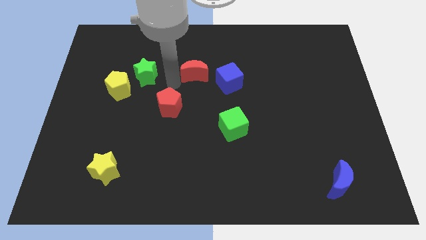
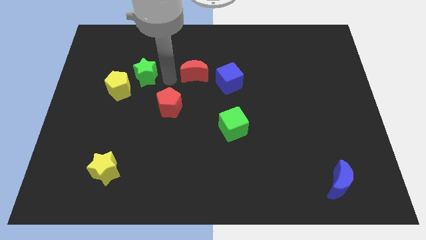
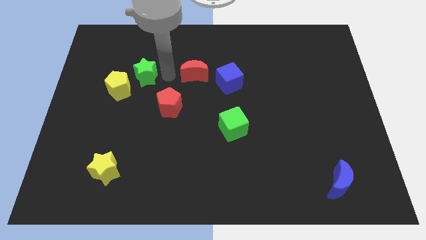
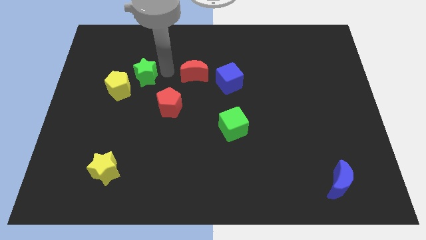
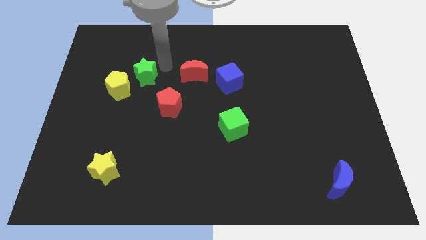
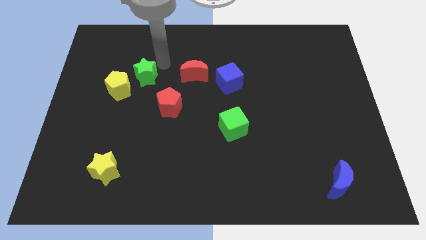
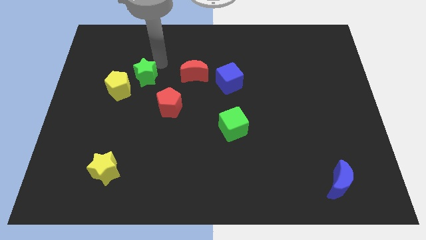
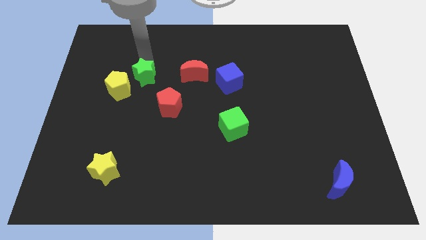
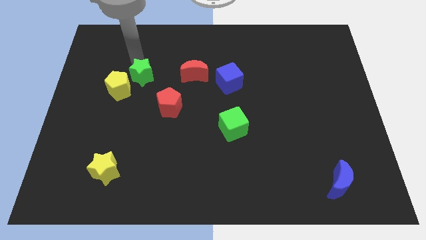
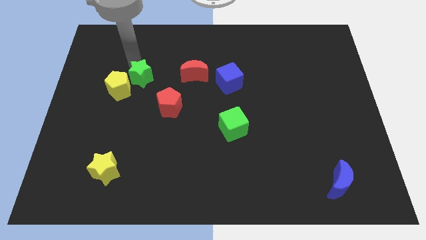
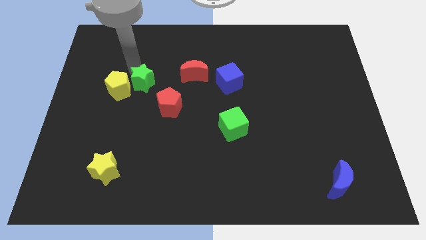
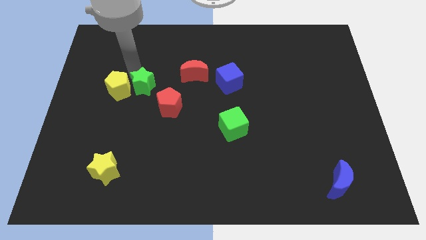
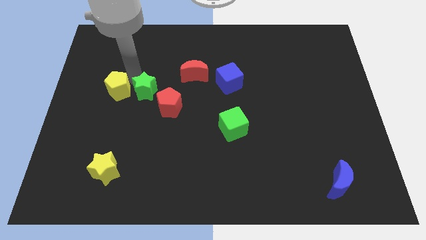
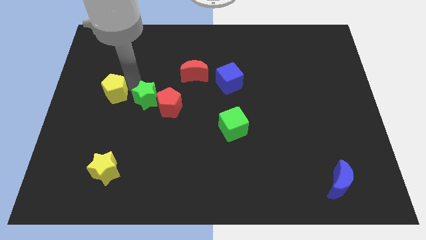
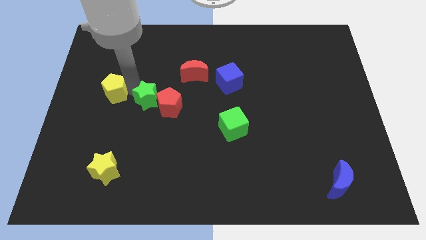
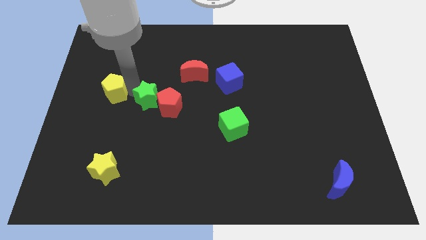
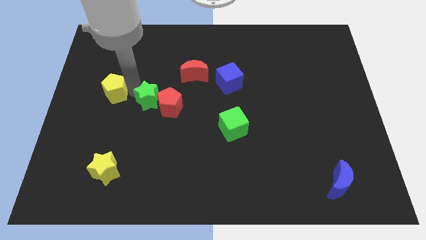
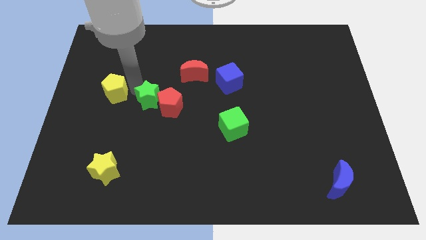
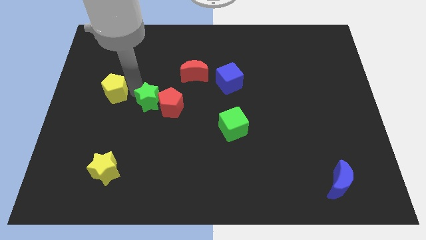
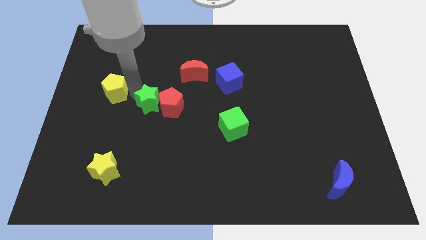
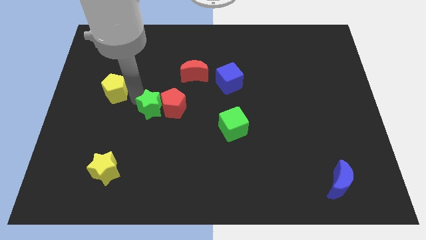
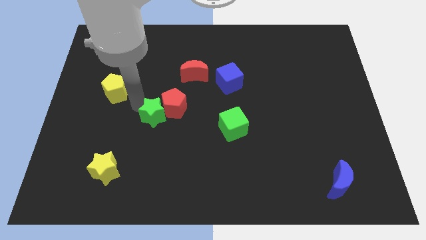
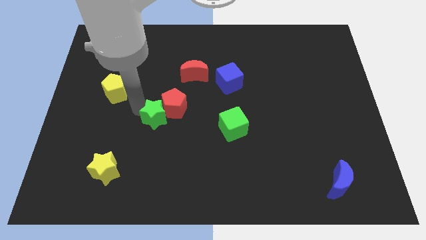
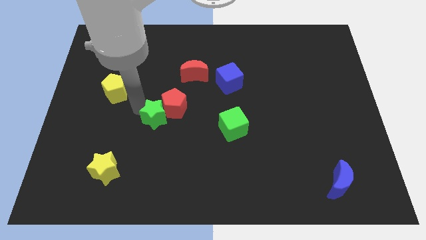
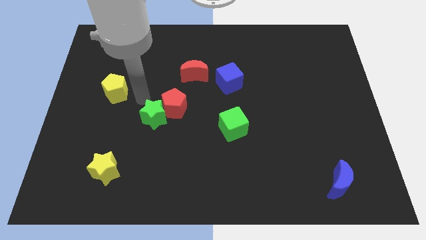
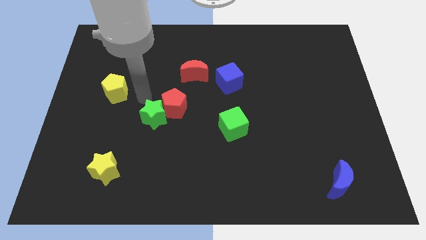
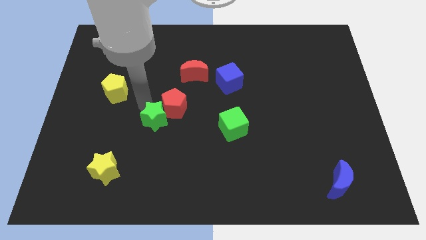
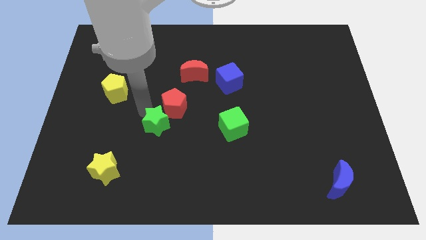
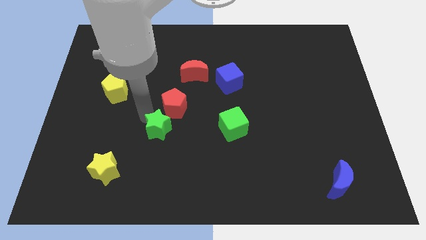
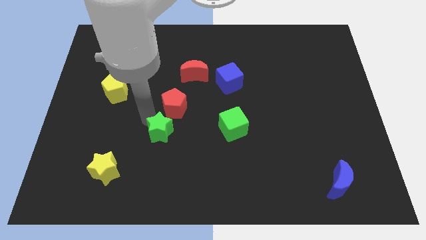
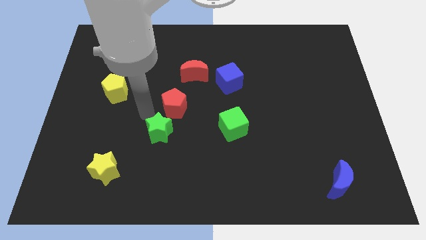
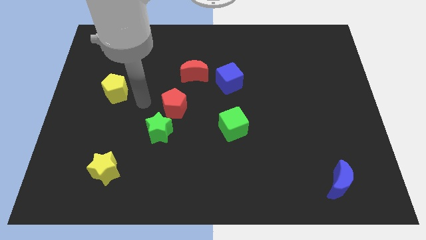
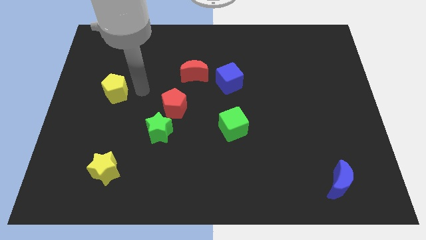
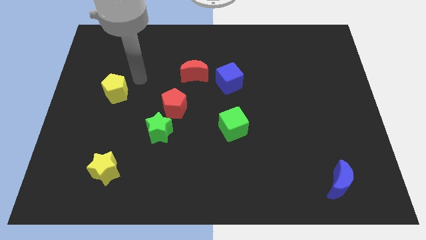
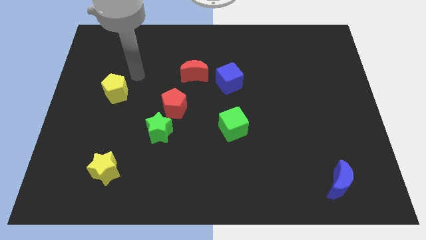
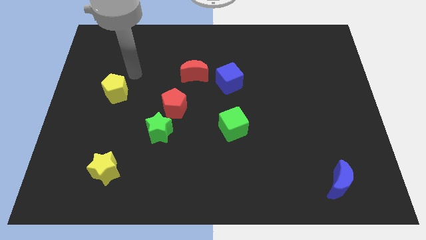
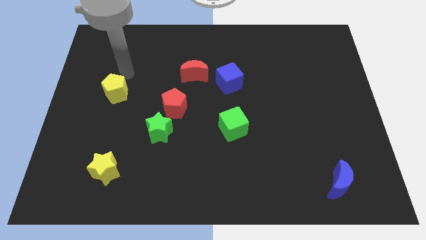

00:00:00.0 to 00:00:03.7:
place the green star below the red pentagon

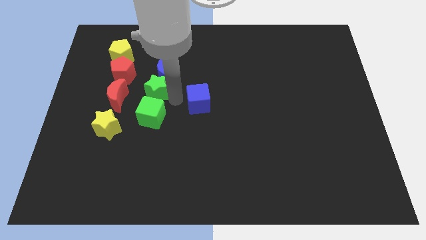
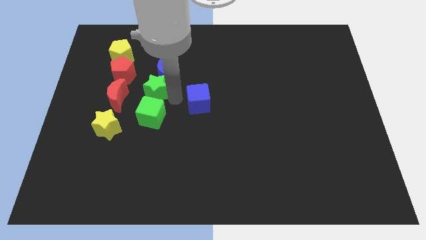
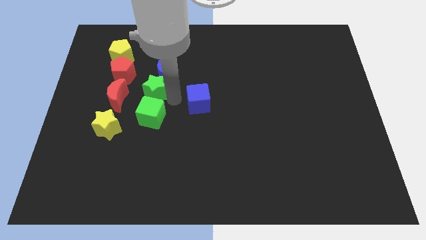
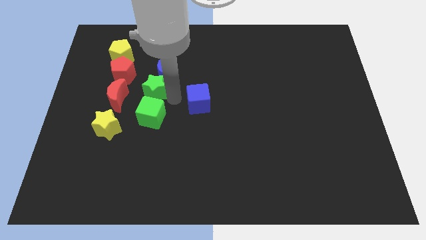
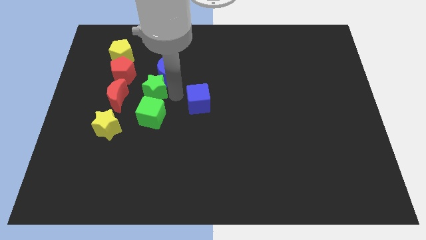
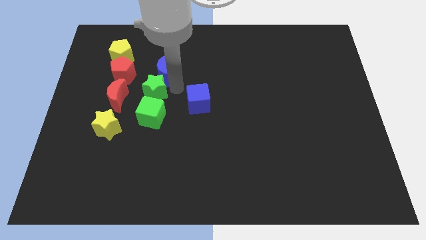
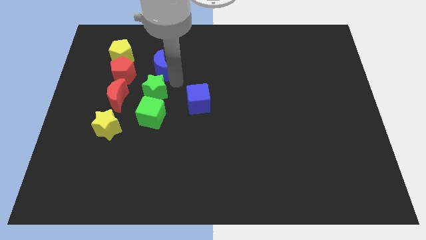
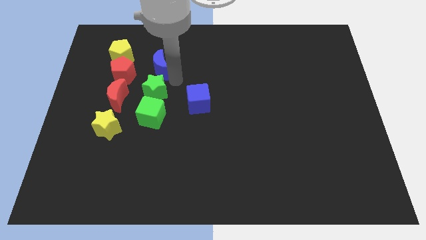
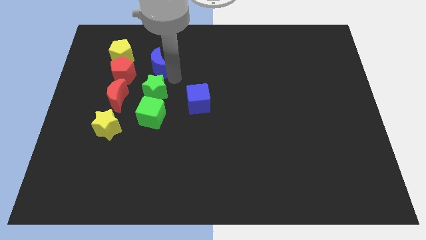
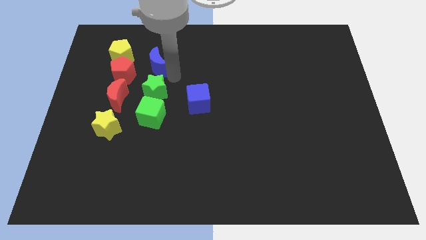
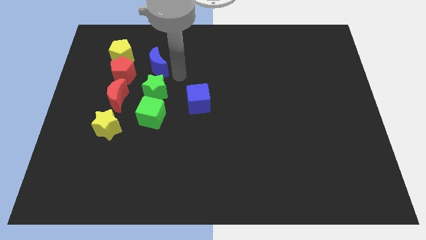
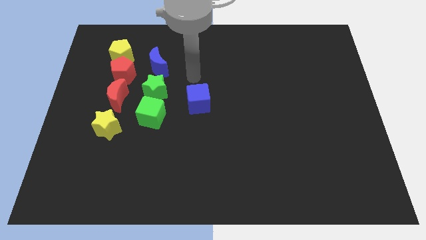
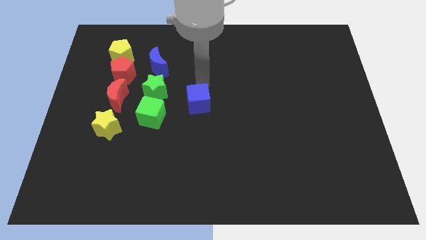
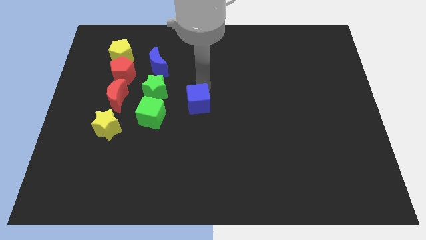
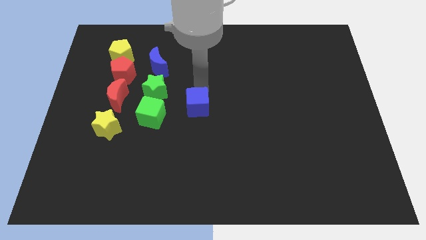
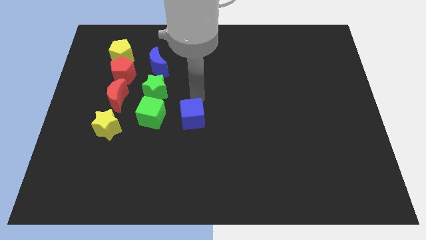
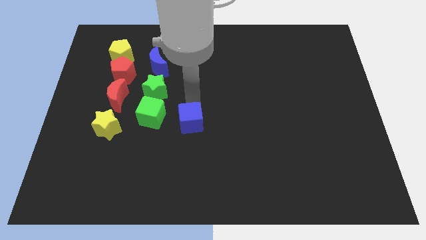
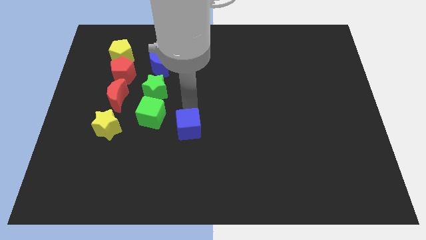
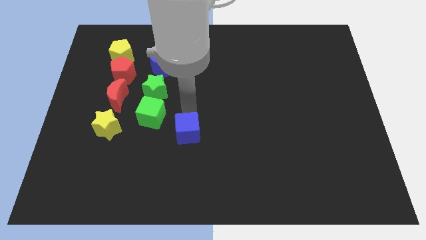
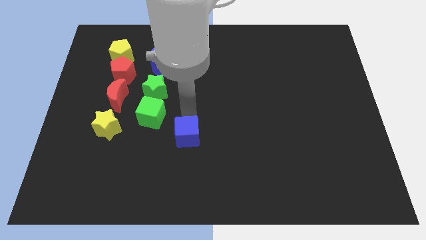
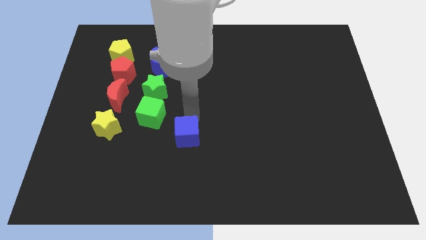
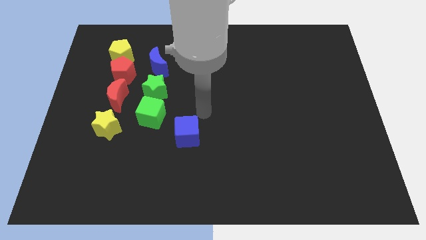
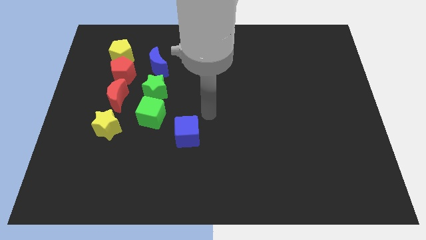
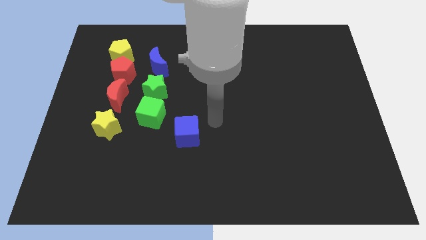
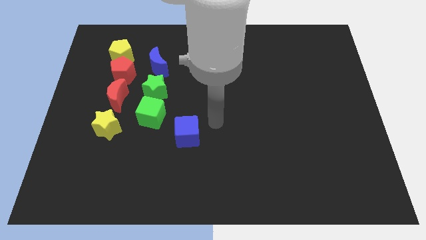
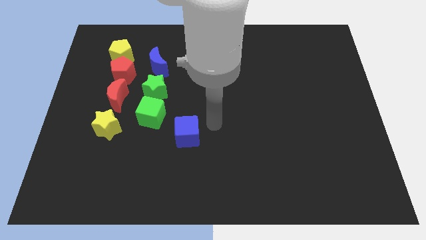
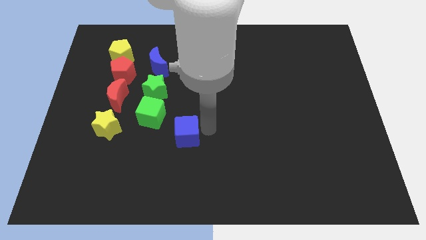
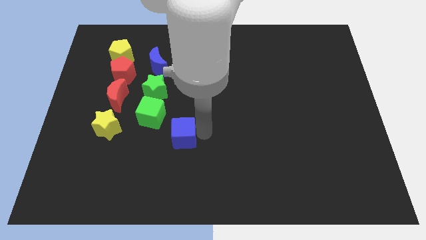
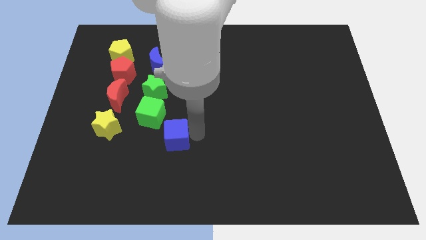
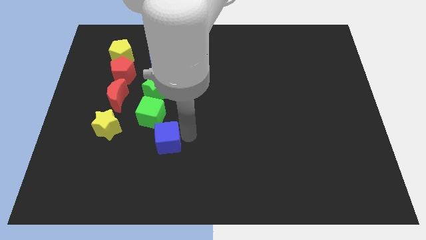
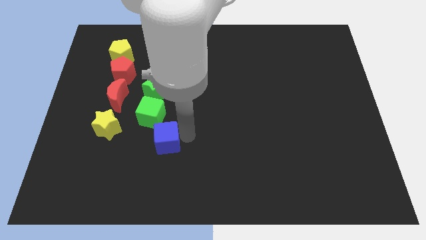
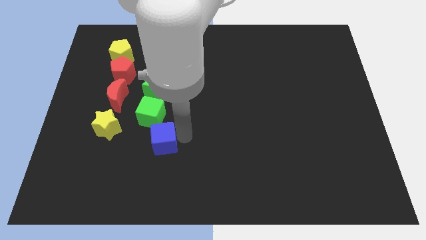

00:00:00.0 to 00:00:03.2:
place blue cube below green cube

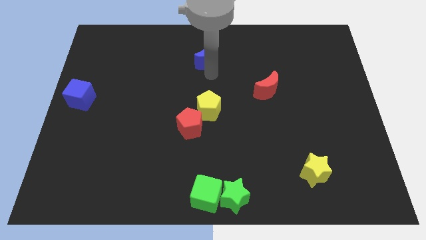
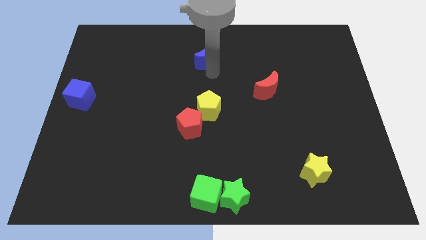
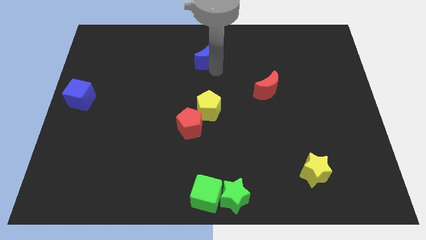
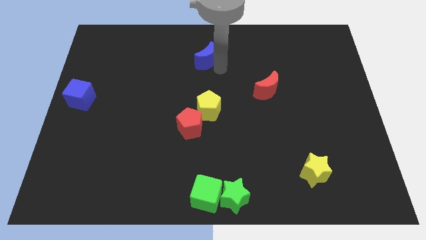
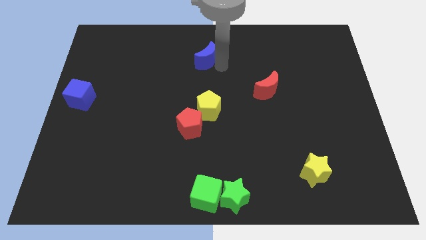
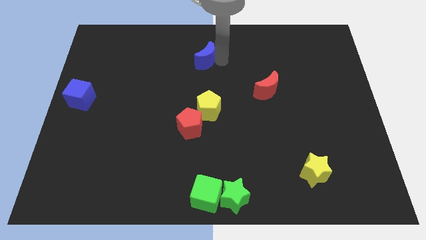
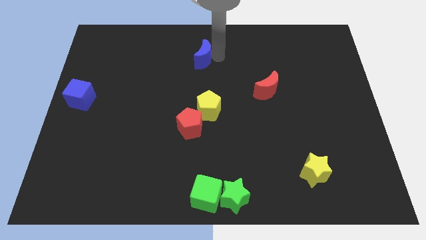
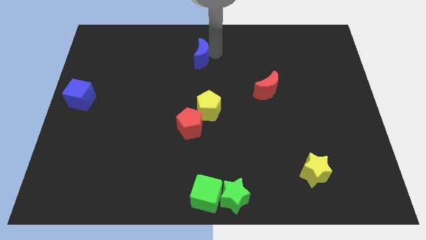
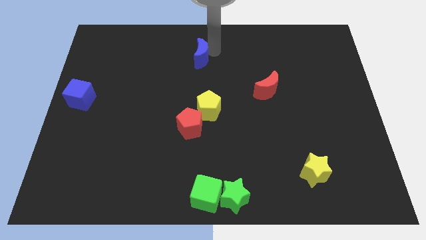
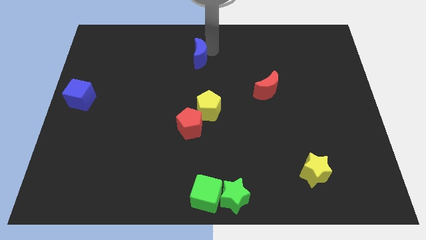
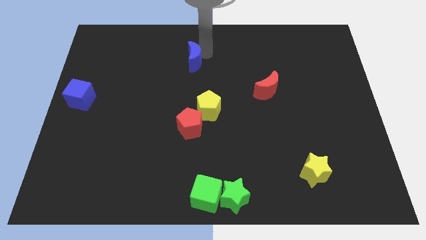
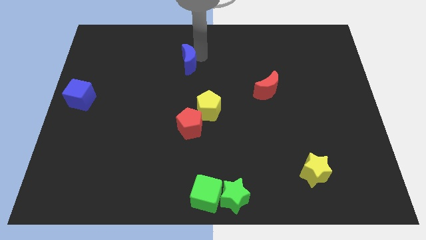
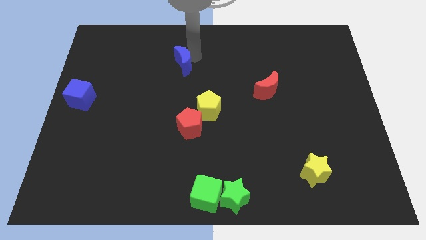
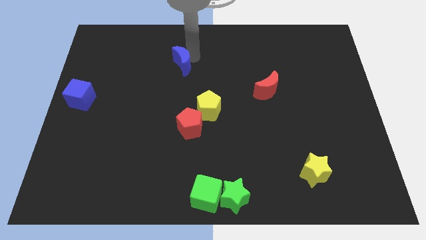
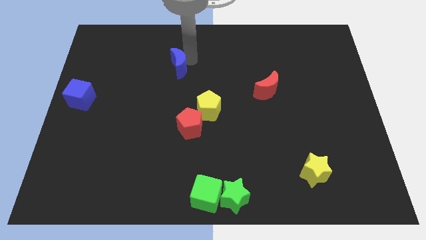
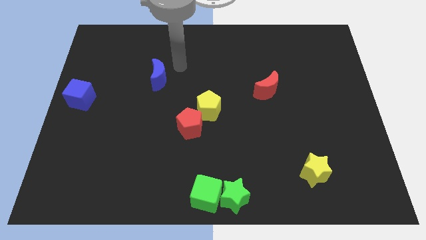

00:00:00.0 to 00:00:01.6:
place the blue moon diagonally above the red pentagon

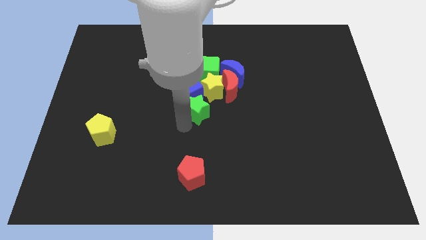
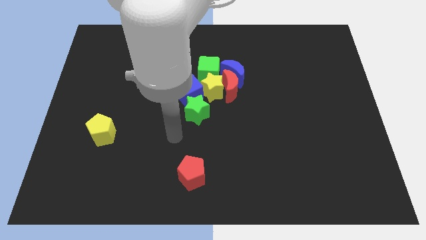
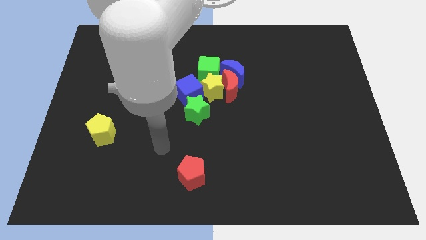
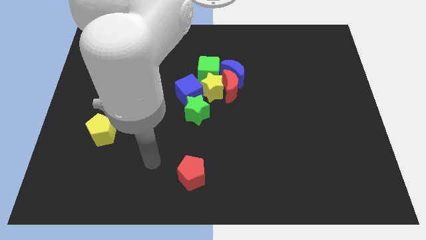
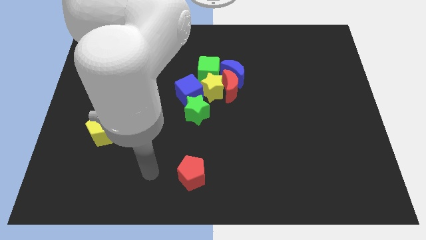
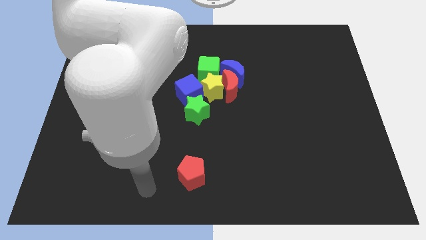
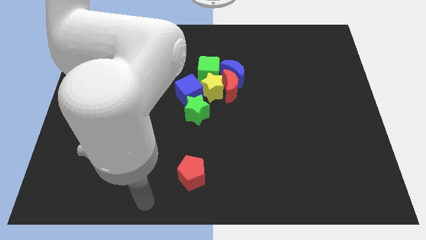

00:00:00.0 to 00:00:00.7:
move your hand away from the green star
